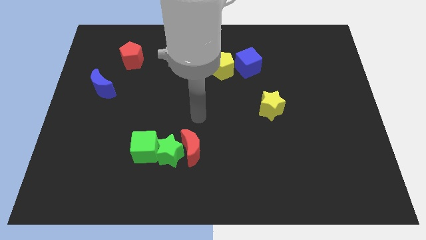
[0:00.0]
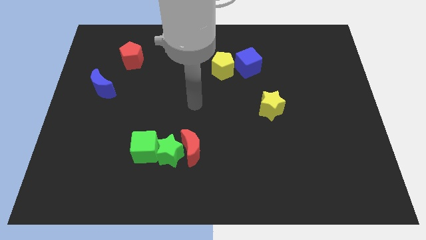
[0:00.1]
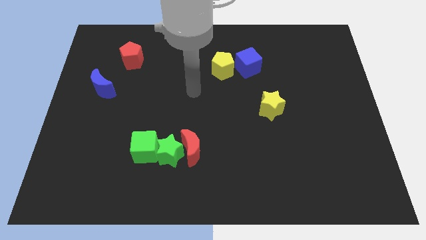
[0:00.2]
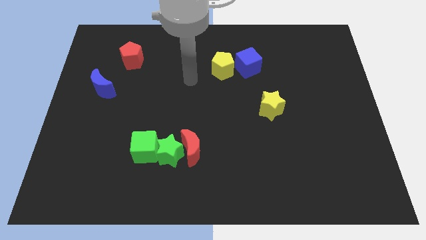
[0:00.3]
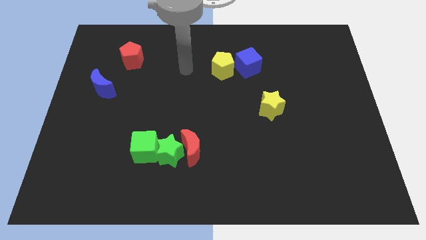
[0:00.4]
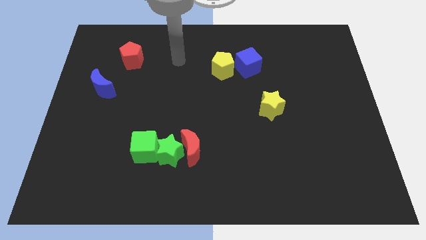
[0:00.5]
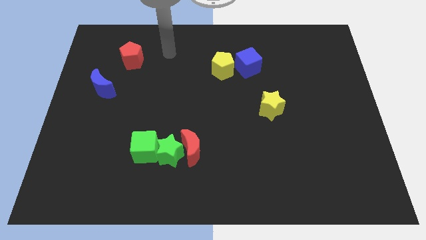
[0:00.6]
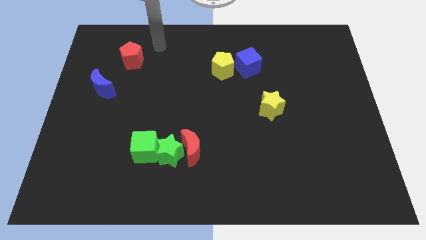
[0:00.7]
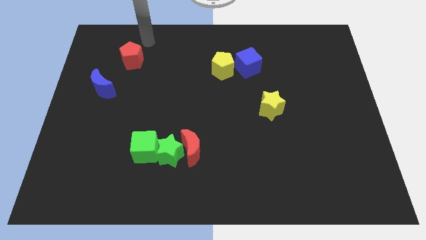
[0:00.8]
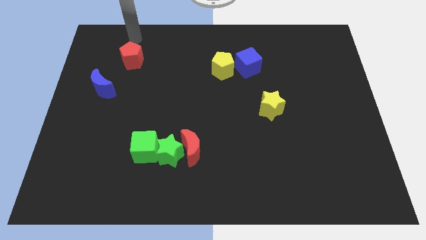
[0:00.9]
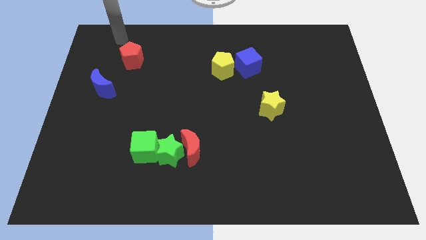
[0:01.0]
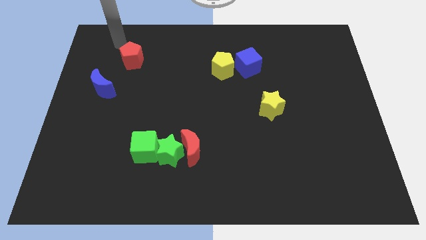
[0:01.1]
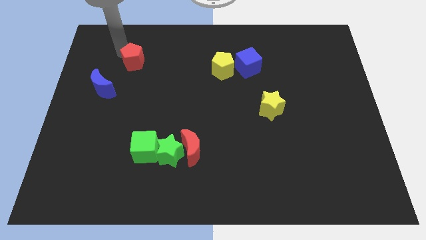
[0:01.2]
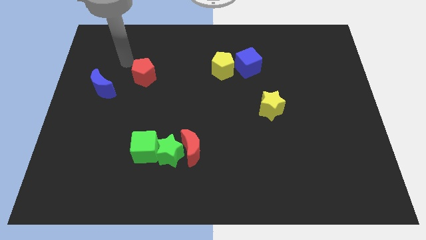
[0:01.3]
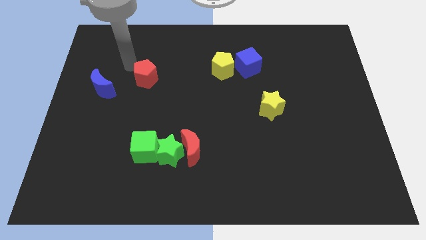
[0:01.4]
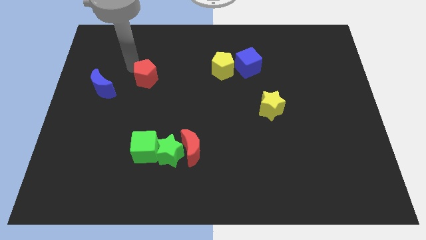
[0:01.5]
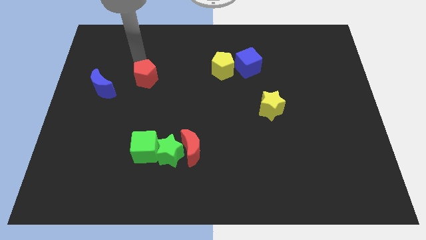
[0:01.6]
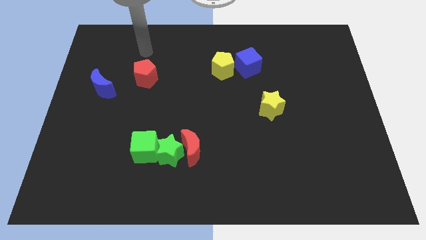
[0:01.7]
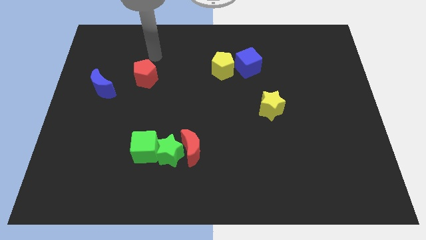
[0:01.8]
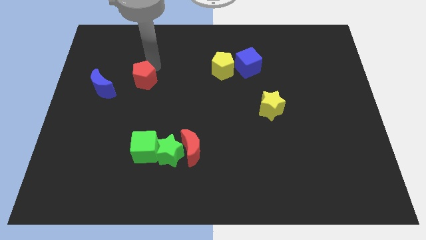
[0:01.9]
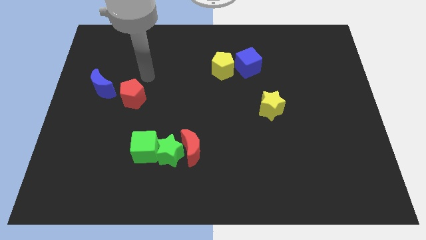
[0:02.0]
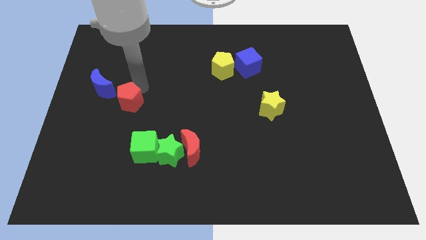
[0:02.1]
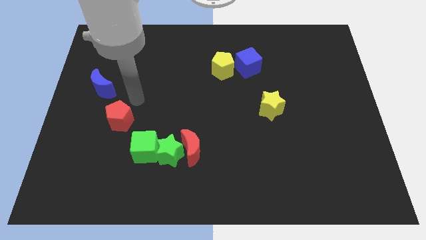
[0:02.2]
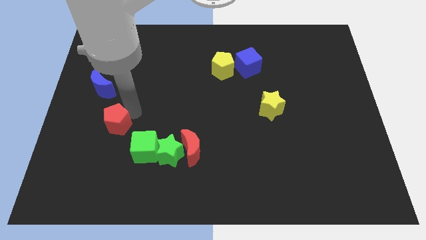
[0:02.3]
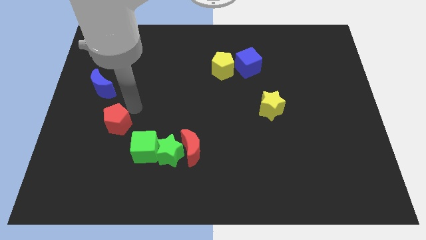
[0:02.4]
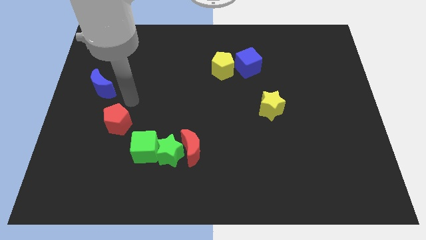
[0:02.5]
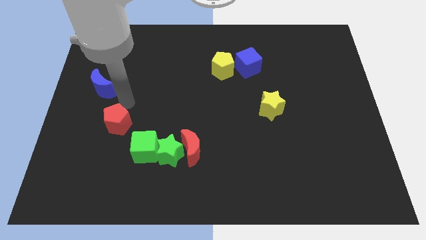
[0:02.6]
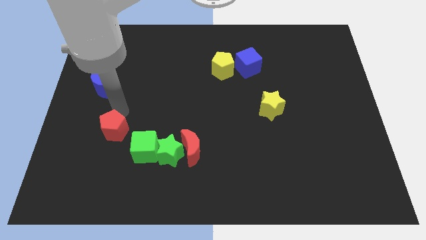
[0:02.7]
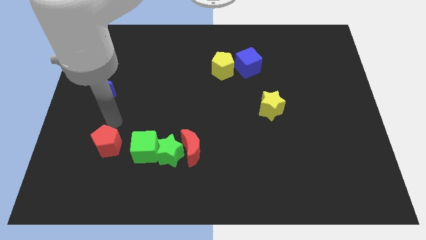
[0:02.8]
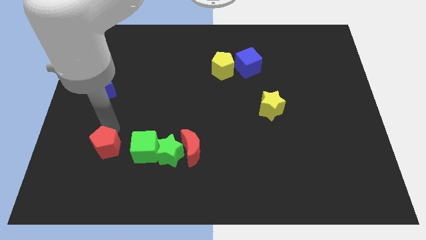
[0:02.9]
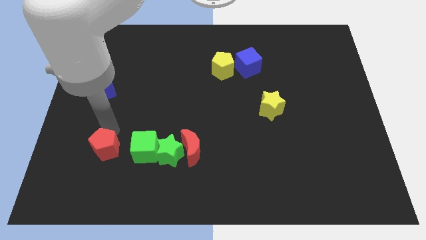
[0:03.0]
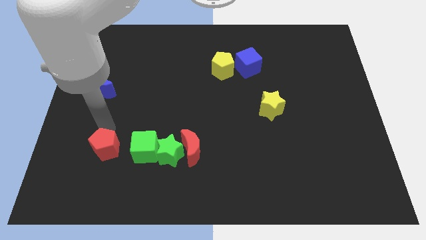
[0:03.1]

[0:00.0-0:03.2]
place the red pentagon to the left of the green cube

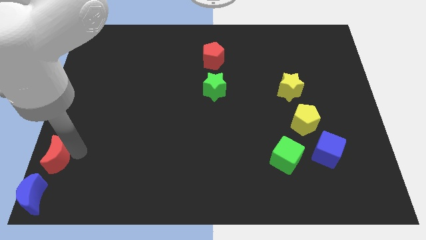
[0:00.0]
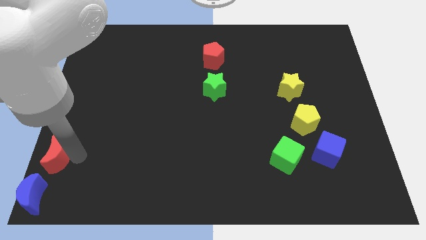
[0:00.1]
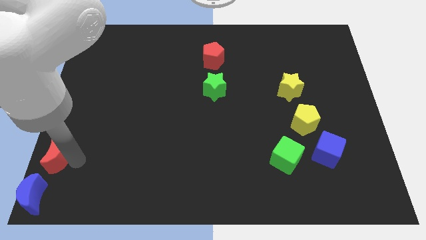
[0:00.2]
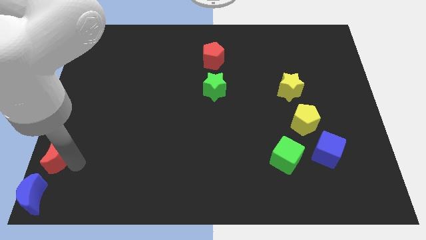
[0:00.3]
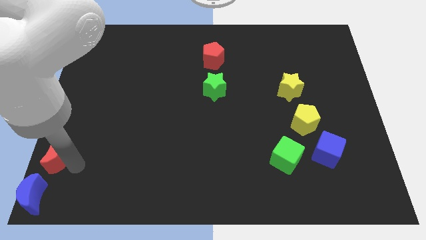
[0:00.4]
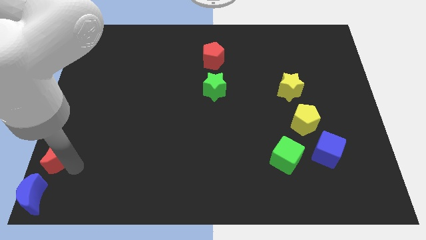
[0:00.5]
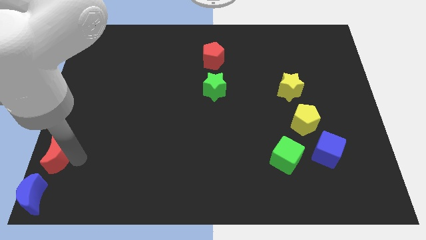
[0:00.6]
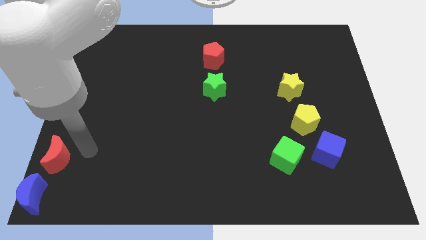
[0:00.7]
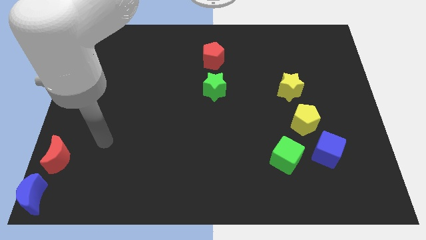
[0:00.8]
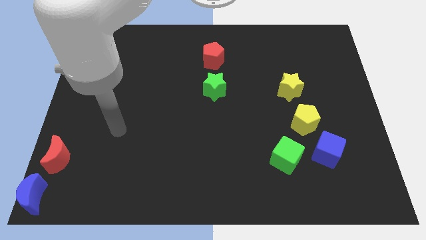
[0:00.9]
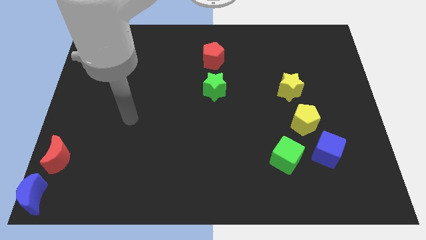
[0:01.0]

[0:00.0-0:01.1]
move your arm away from red moon

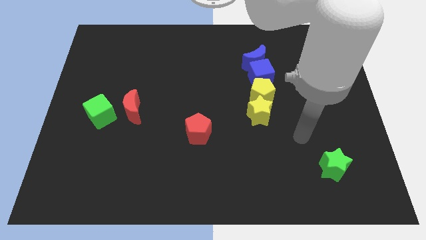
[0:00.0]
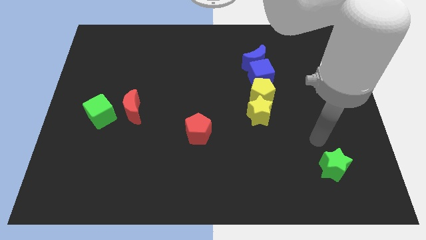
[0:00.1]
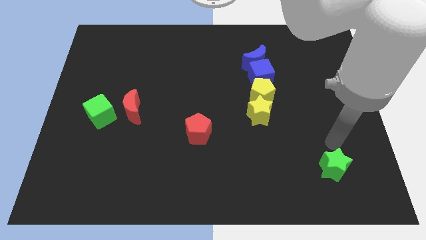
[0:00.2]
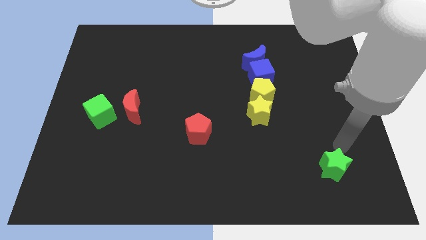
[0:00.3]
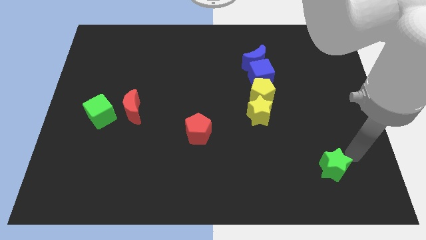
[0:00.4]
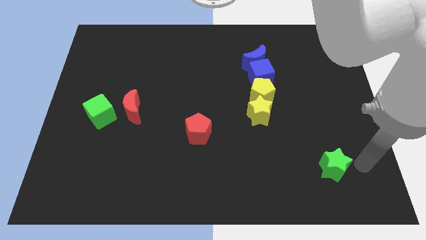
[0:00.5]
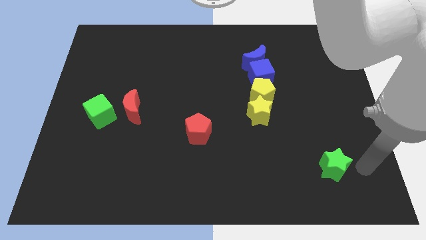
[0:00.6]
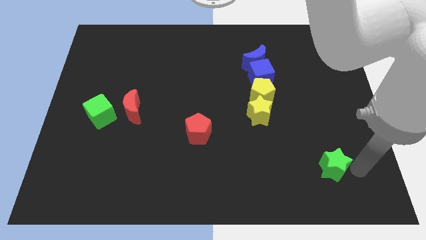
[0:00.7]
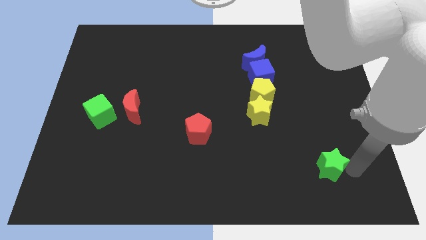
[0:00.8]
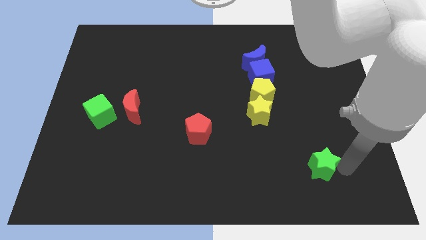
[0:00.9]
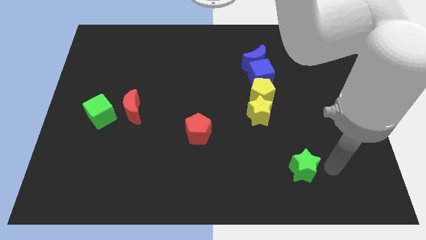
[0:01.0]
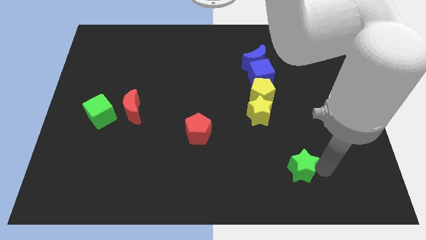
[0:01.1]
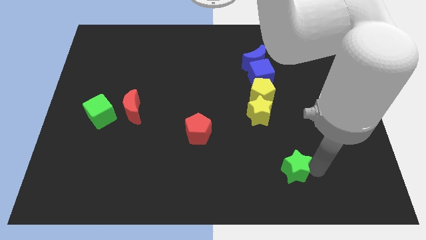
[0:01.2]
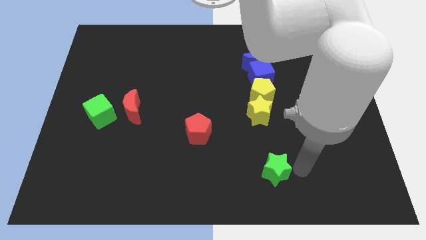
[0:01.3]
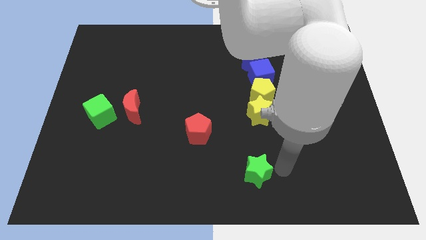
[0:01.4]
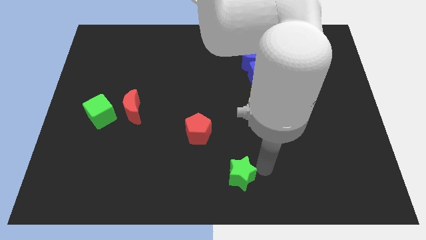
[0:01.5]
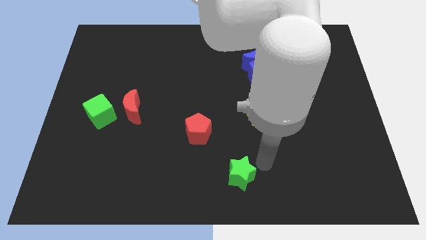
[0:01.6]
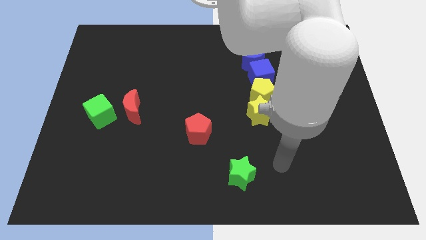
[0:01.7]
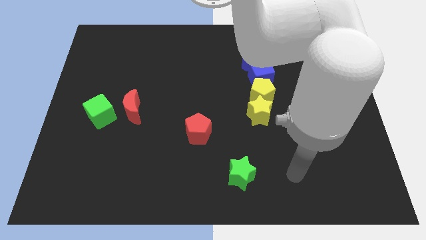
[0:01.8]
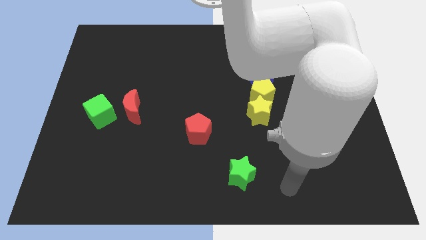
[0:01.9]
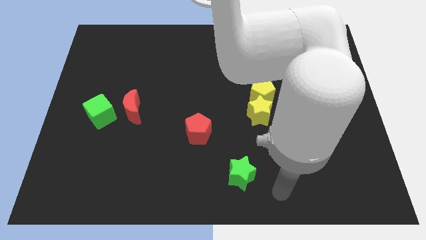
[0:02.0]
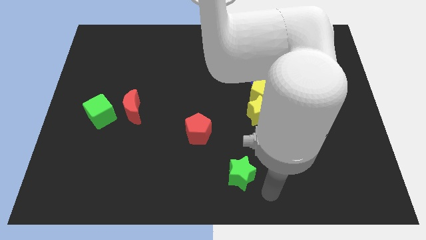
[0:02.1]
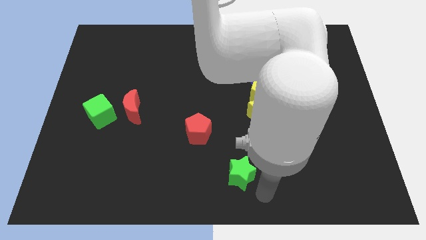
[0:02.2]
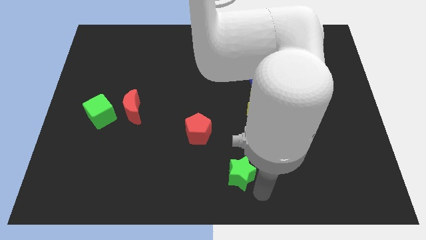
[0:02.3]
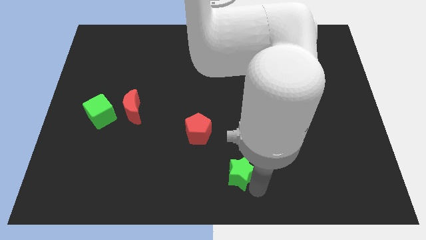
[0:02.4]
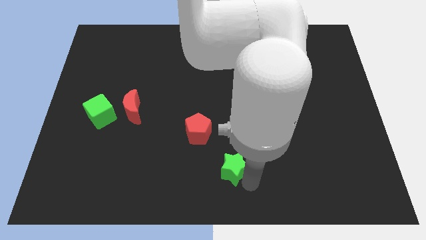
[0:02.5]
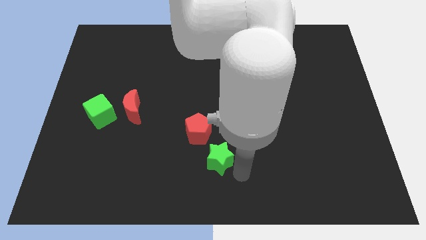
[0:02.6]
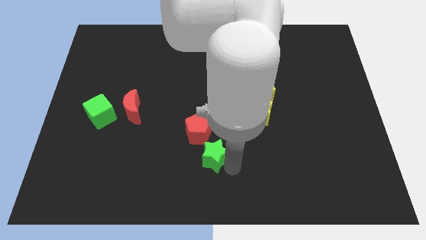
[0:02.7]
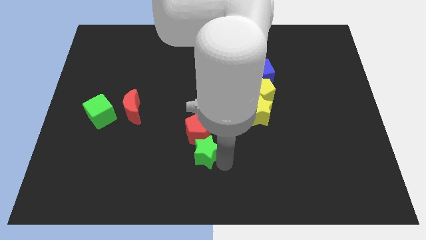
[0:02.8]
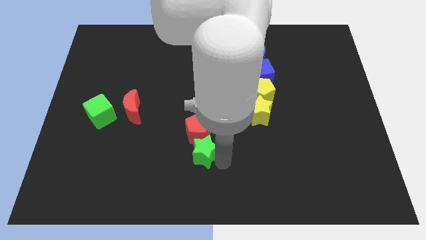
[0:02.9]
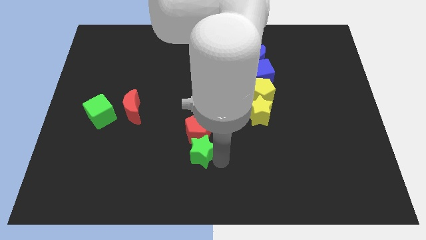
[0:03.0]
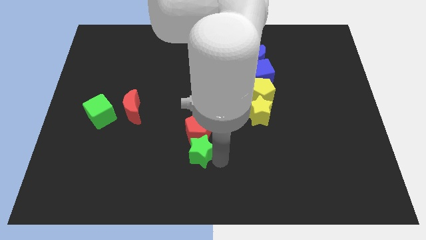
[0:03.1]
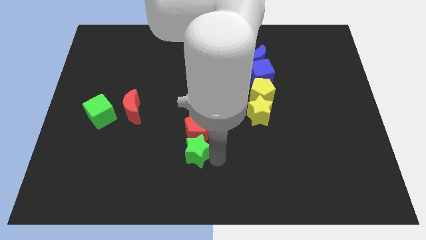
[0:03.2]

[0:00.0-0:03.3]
put the green star to the bottom side of the red pentagon

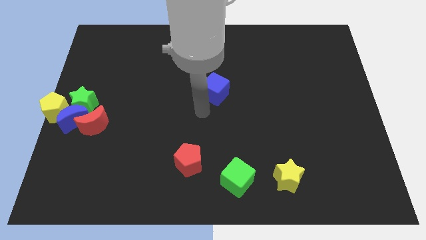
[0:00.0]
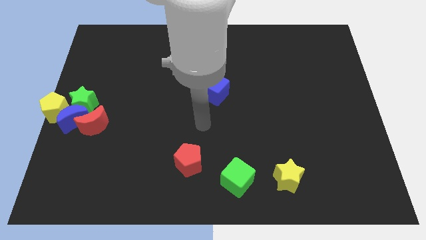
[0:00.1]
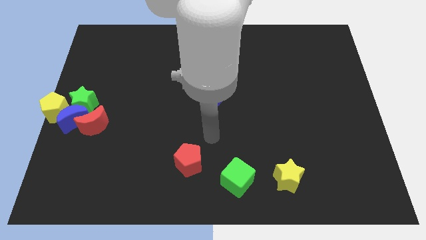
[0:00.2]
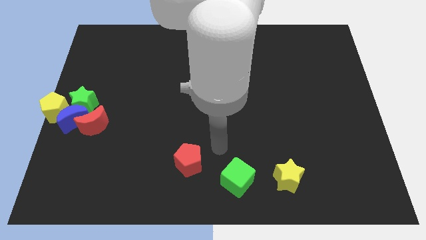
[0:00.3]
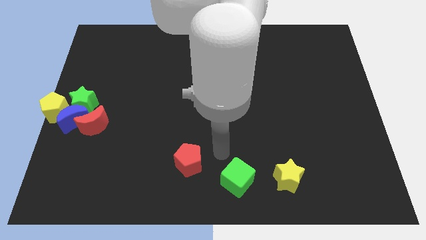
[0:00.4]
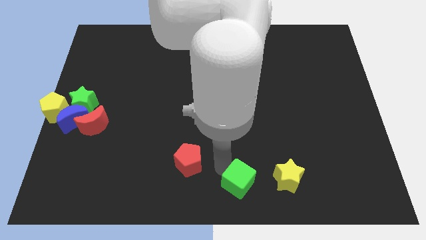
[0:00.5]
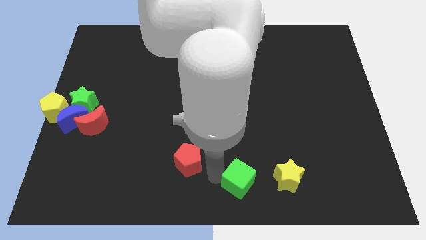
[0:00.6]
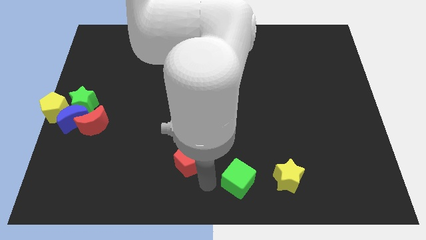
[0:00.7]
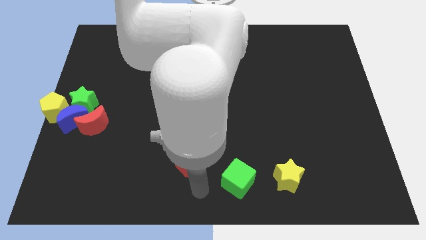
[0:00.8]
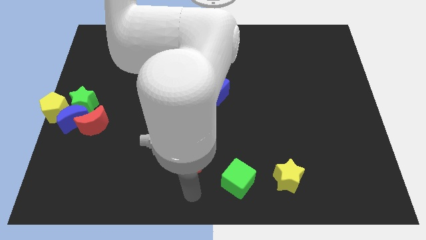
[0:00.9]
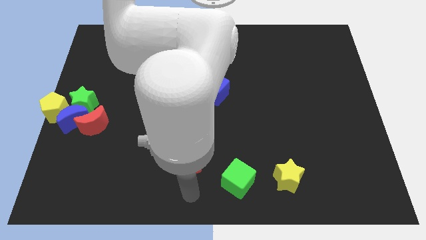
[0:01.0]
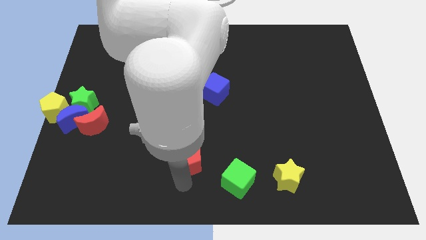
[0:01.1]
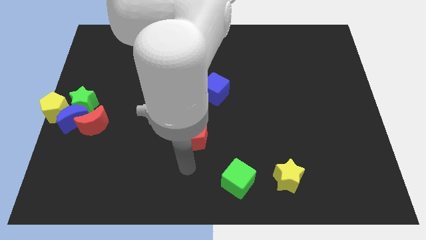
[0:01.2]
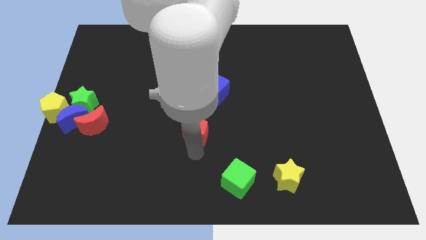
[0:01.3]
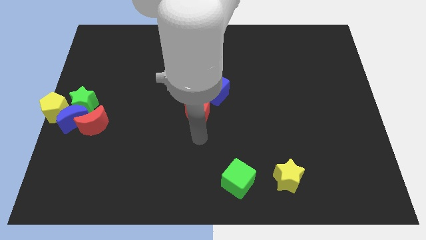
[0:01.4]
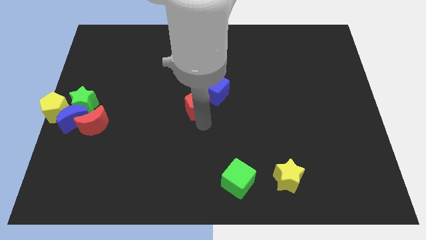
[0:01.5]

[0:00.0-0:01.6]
push the red pentagon near the blue cube
